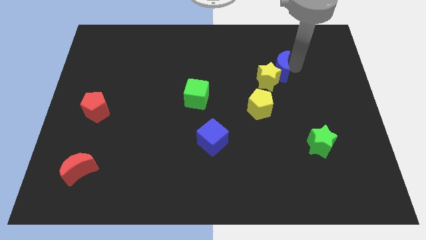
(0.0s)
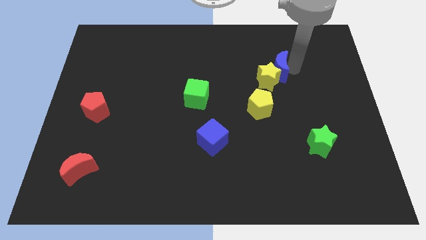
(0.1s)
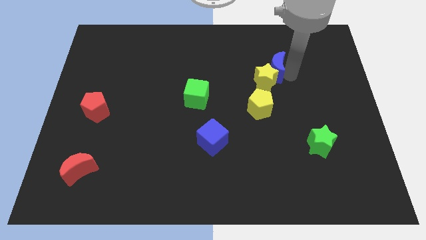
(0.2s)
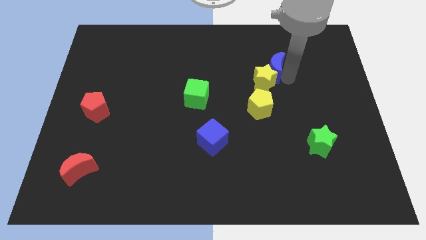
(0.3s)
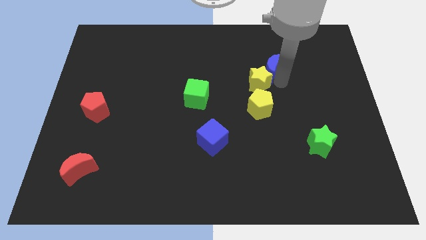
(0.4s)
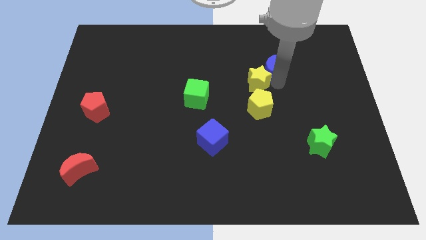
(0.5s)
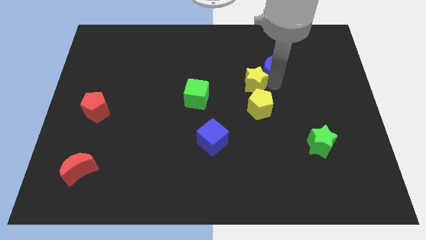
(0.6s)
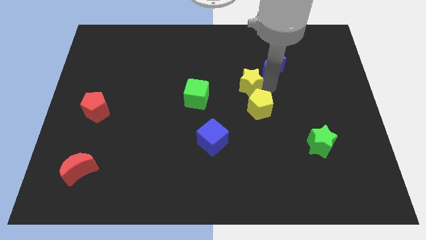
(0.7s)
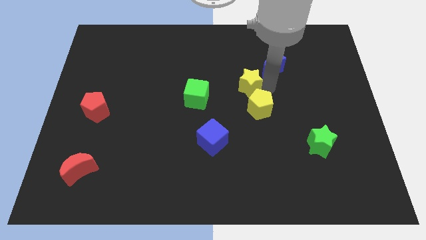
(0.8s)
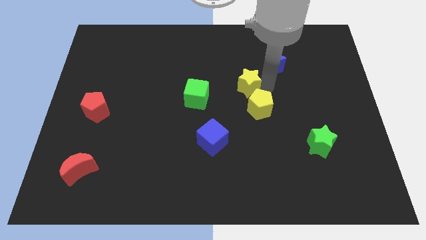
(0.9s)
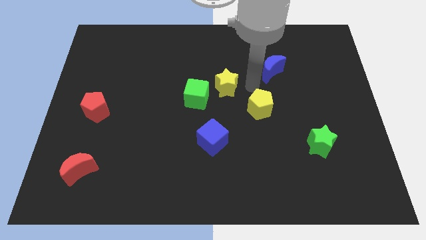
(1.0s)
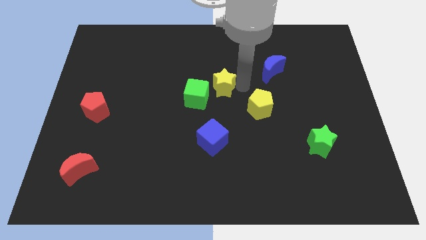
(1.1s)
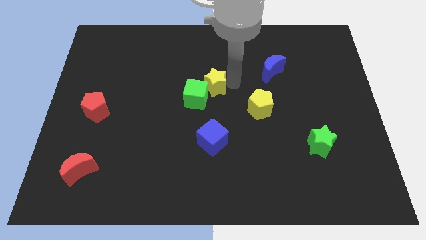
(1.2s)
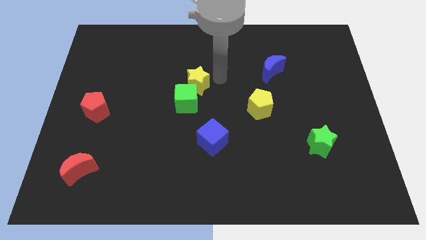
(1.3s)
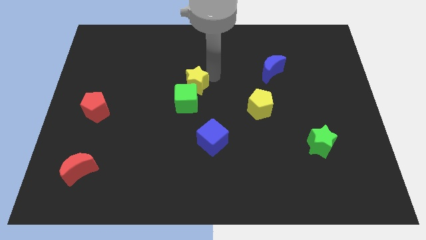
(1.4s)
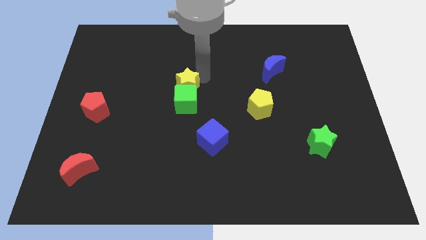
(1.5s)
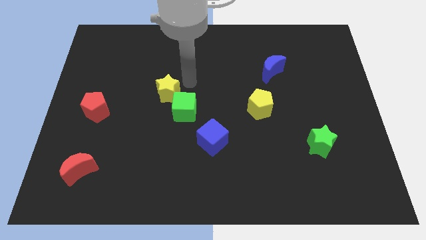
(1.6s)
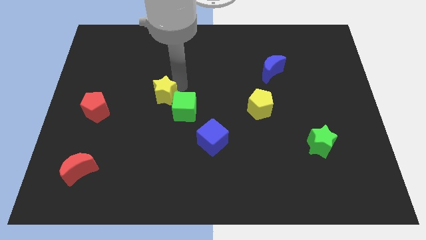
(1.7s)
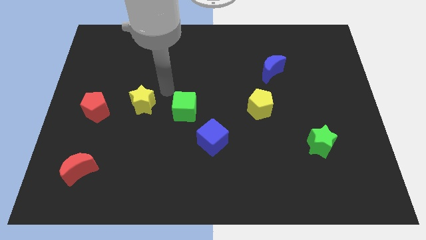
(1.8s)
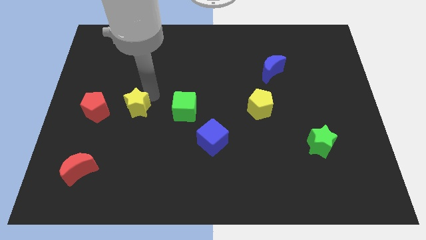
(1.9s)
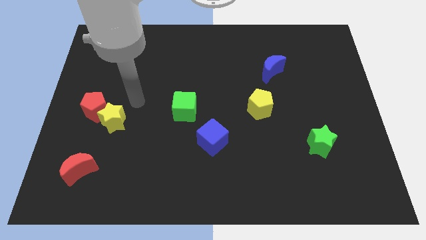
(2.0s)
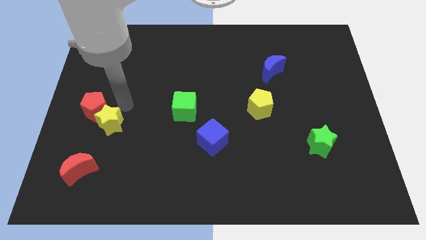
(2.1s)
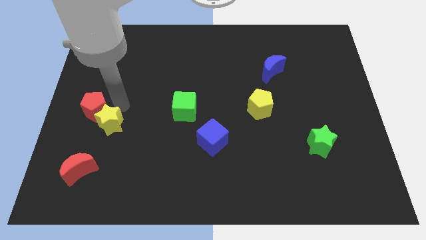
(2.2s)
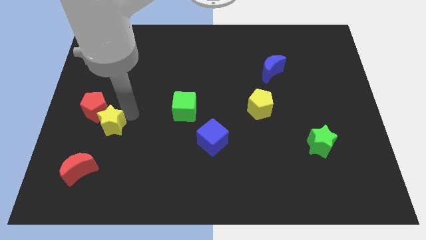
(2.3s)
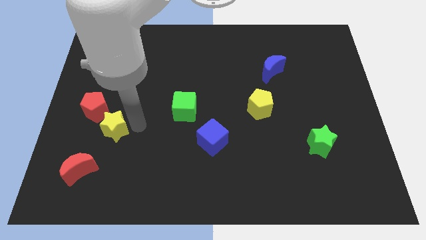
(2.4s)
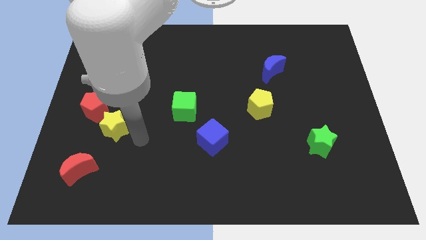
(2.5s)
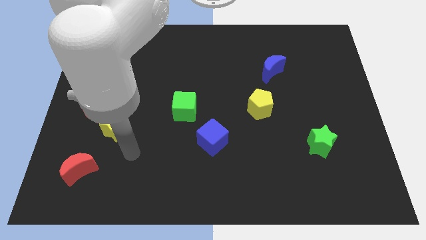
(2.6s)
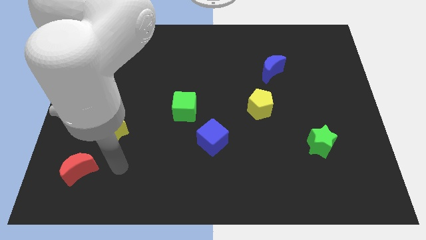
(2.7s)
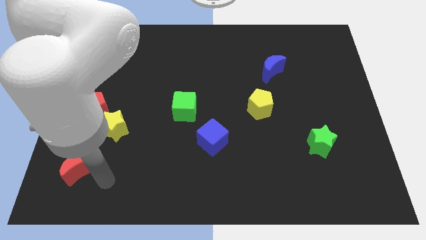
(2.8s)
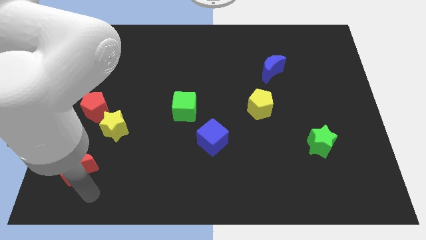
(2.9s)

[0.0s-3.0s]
place the yellow star to the bottom right of the red pentagon

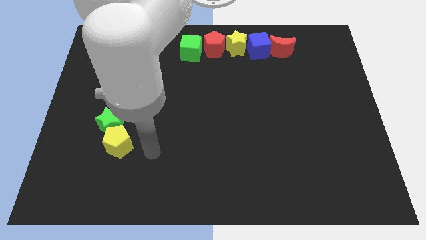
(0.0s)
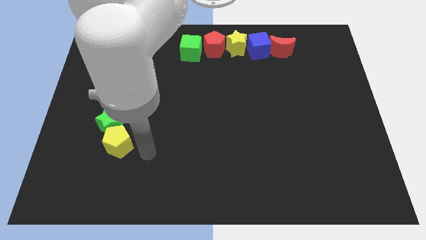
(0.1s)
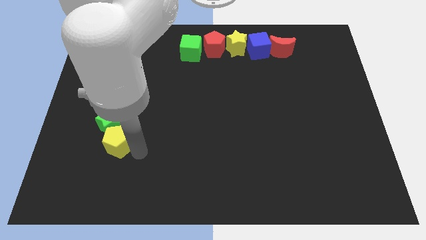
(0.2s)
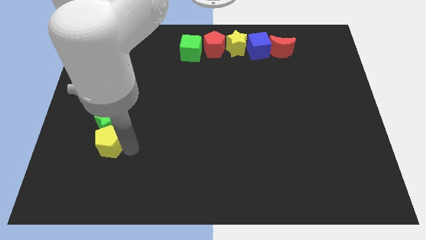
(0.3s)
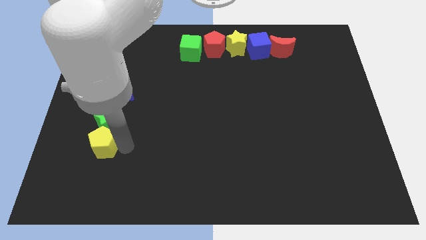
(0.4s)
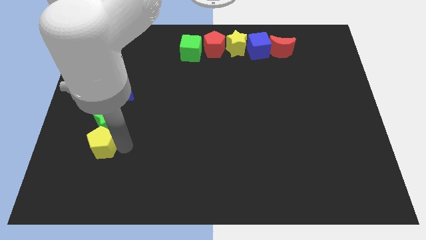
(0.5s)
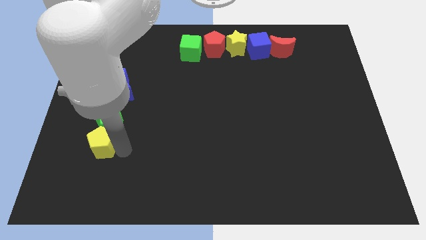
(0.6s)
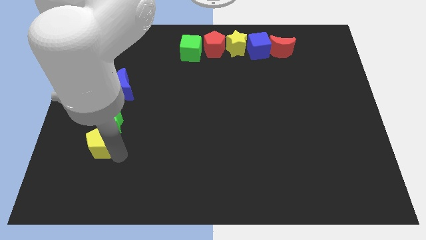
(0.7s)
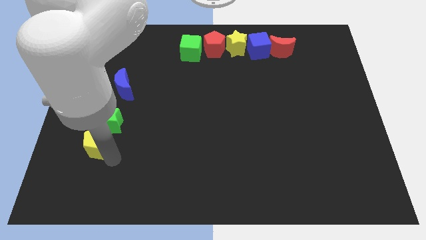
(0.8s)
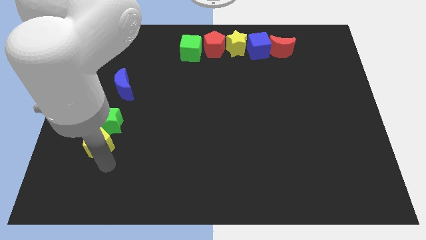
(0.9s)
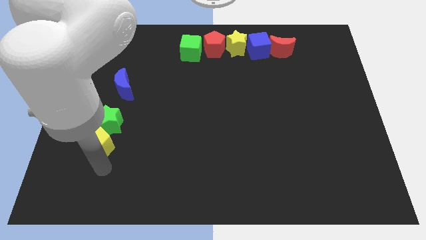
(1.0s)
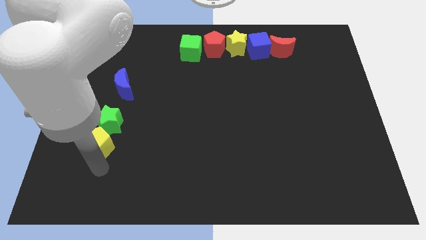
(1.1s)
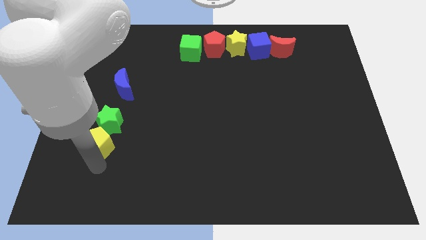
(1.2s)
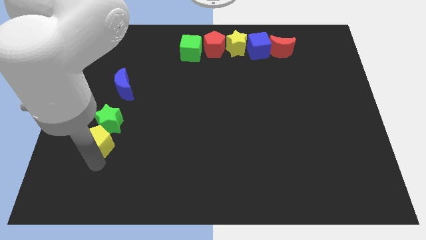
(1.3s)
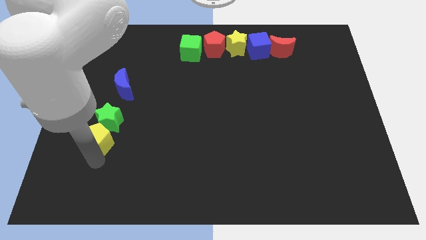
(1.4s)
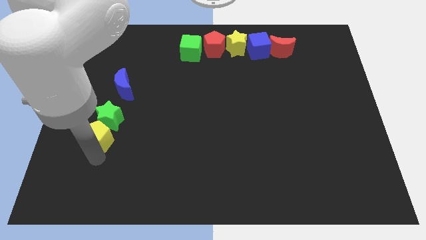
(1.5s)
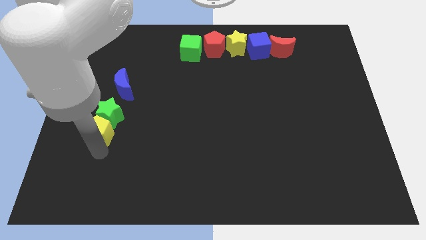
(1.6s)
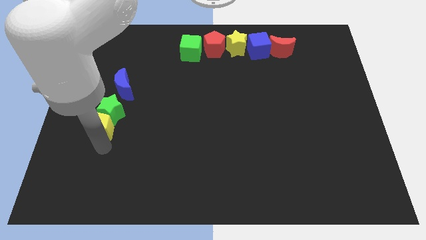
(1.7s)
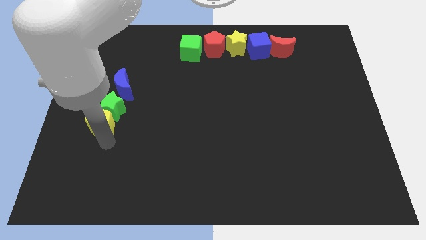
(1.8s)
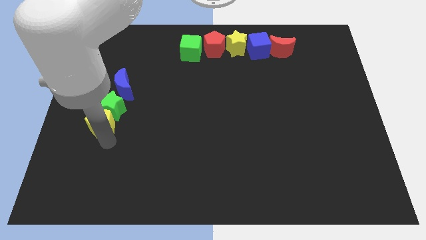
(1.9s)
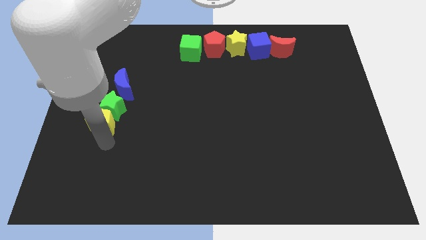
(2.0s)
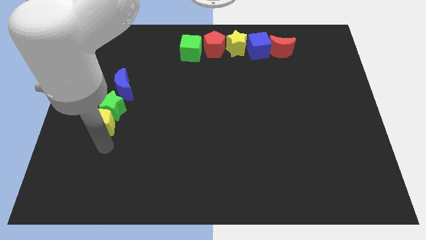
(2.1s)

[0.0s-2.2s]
push yellow pentagon into the green star

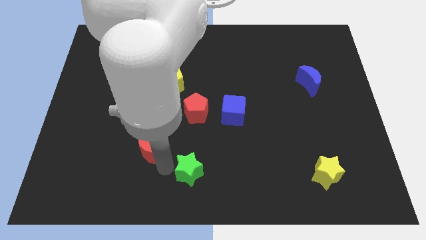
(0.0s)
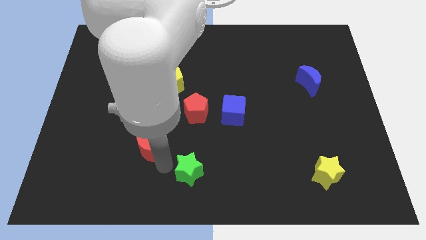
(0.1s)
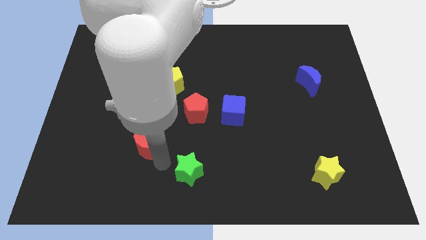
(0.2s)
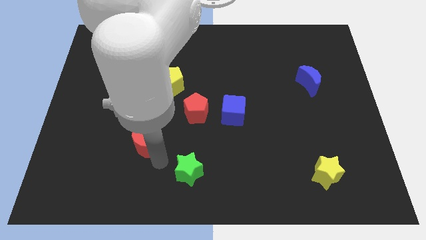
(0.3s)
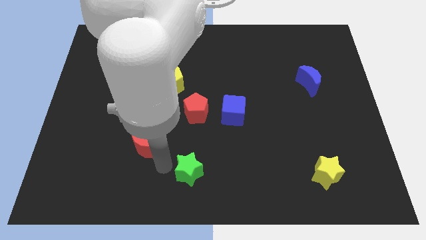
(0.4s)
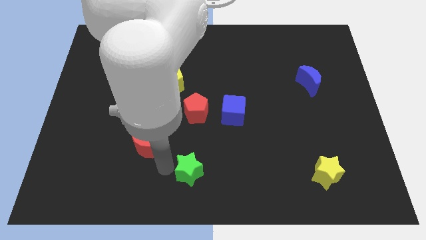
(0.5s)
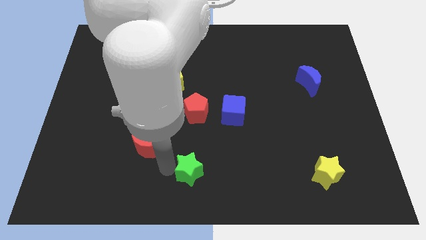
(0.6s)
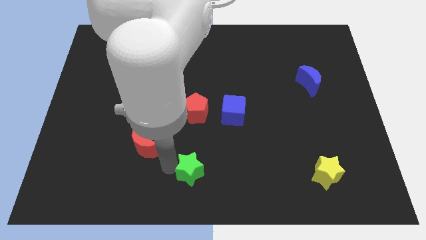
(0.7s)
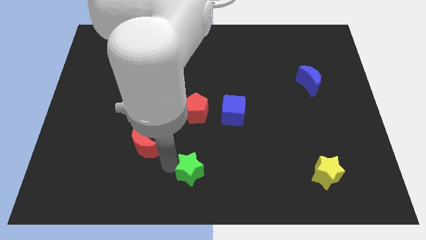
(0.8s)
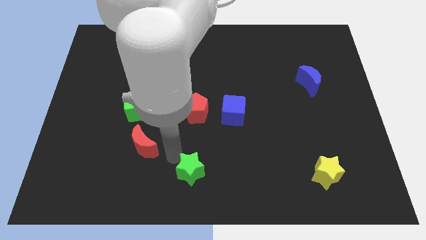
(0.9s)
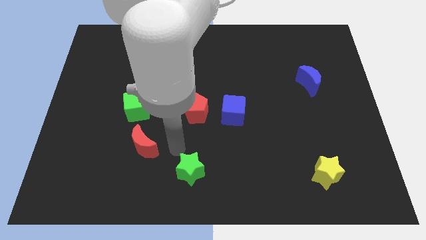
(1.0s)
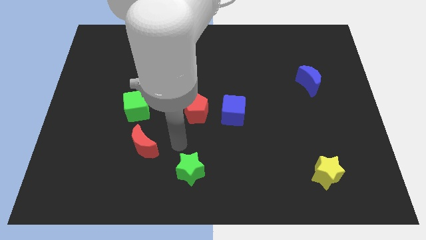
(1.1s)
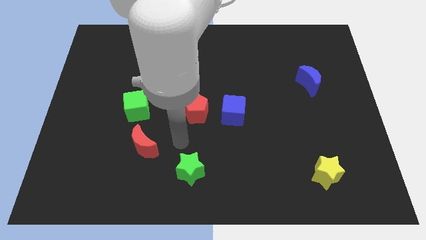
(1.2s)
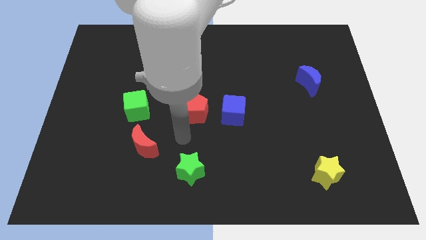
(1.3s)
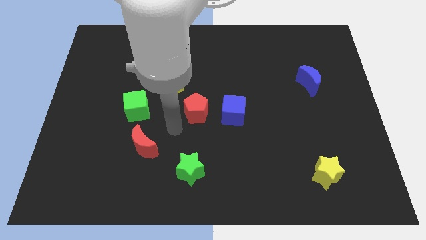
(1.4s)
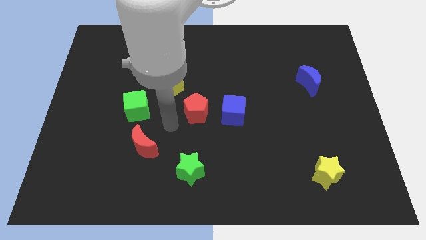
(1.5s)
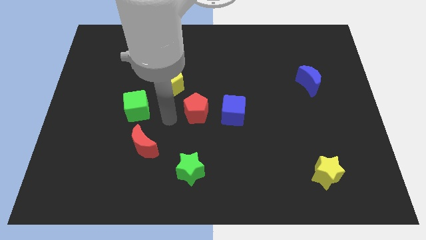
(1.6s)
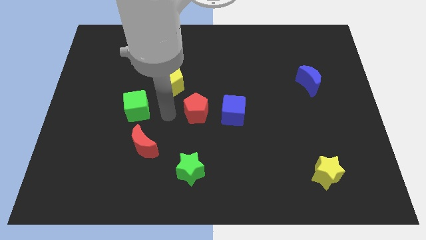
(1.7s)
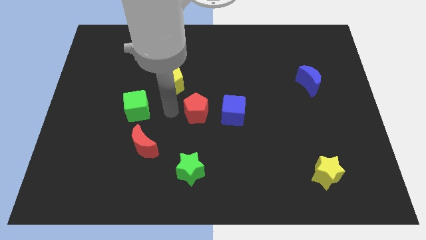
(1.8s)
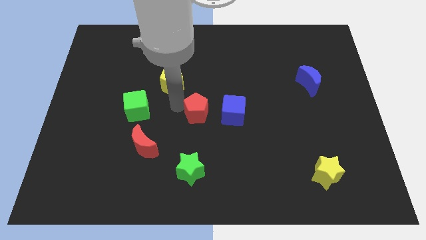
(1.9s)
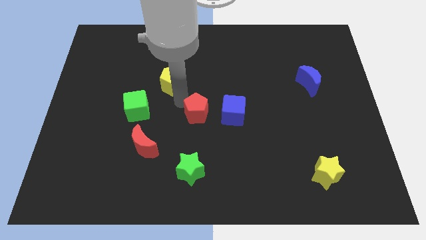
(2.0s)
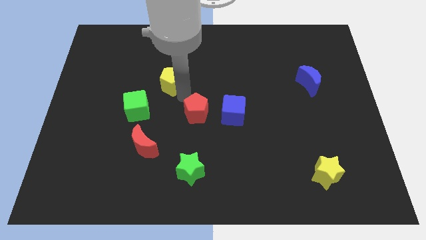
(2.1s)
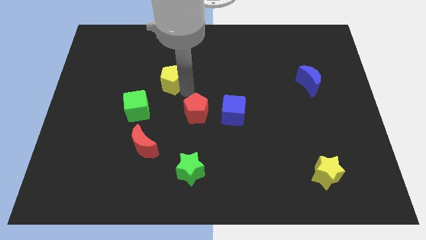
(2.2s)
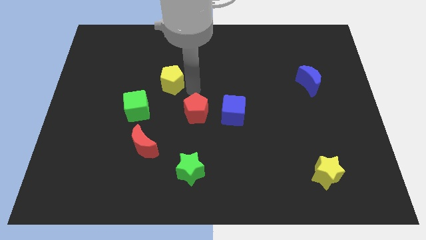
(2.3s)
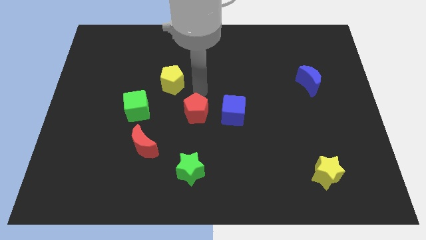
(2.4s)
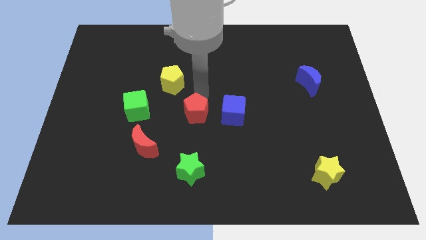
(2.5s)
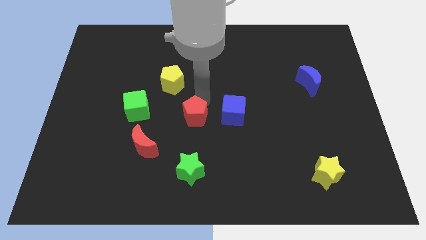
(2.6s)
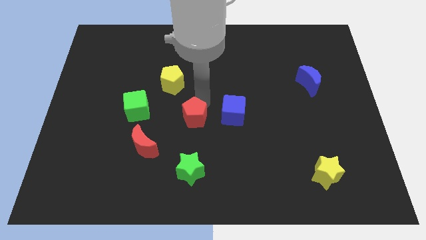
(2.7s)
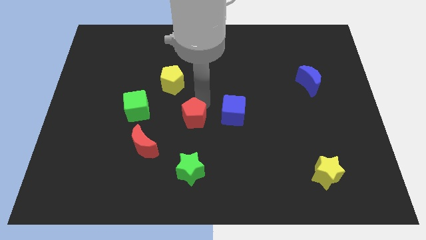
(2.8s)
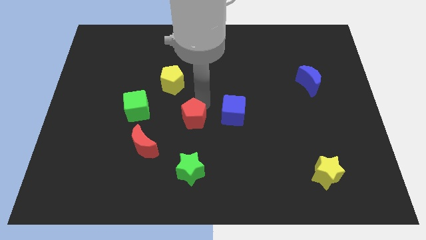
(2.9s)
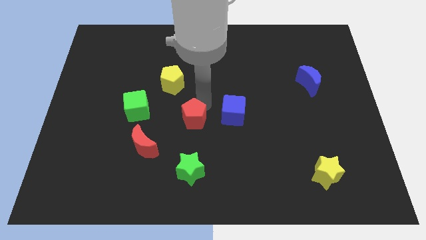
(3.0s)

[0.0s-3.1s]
slightly touch the red crescent along with the green star and pentagons

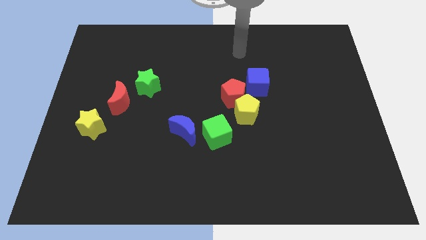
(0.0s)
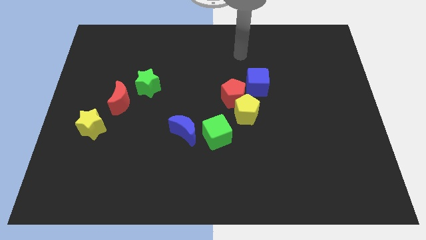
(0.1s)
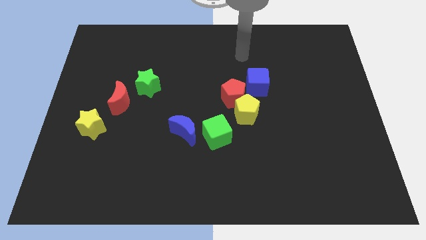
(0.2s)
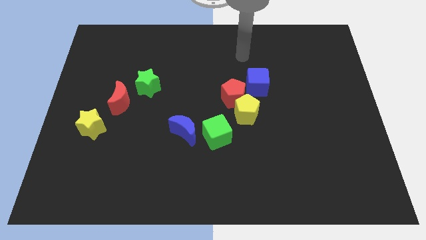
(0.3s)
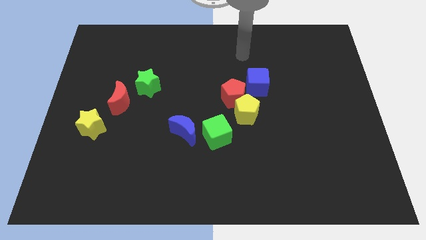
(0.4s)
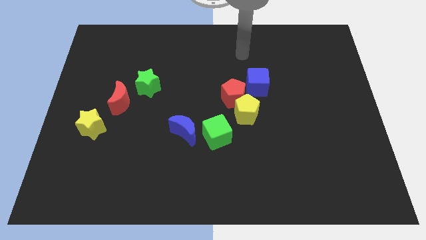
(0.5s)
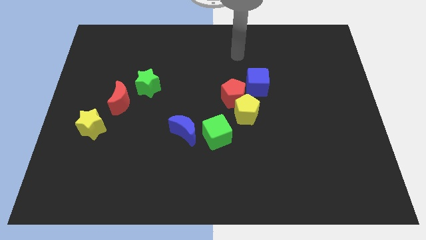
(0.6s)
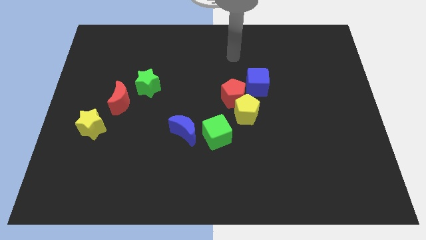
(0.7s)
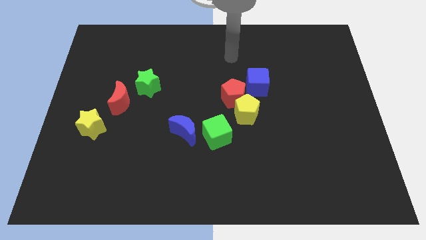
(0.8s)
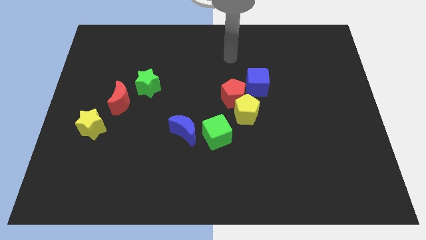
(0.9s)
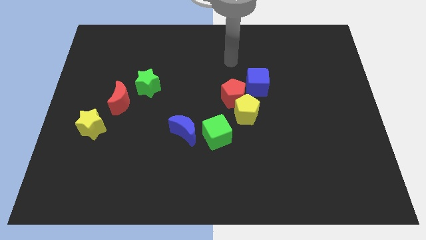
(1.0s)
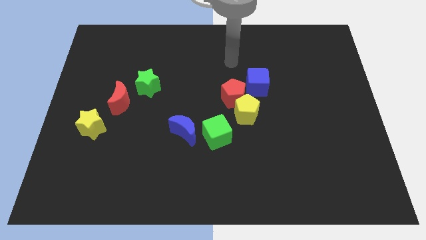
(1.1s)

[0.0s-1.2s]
point your arm at the top side of the red pentagon
